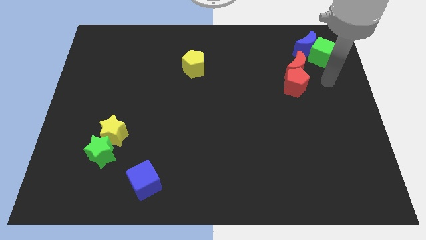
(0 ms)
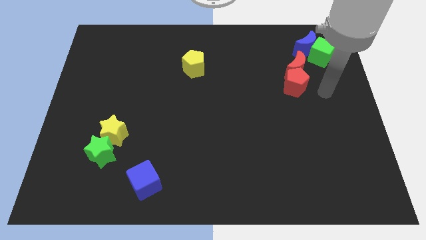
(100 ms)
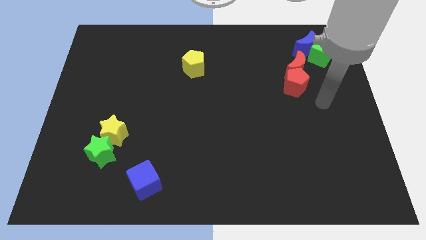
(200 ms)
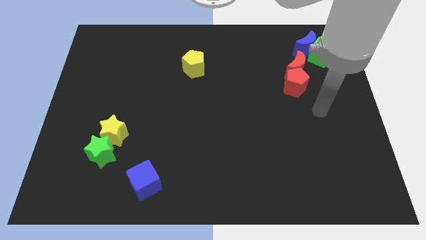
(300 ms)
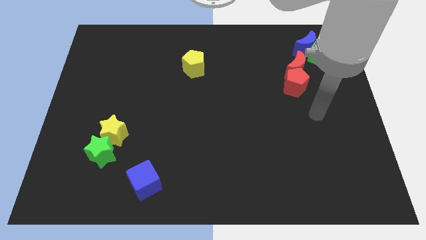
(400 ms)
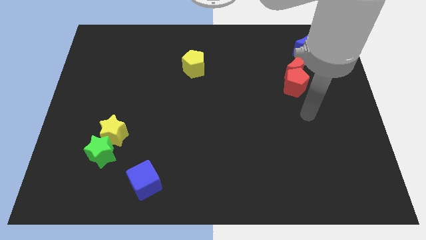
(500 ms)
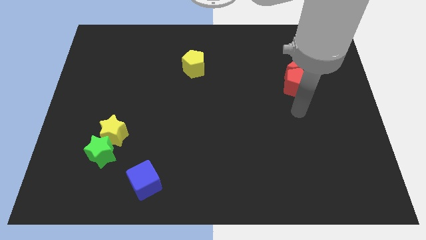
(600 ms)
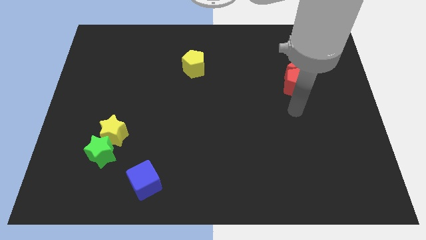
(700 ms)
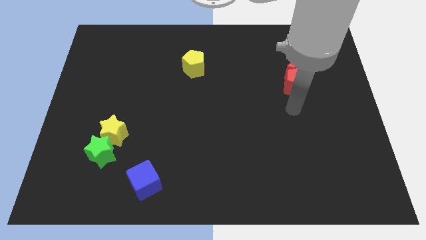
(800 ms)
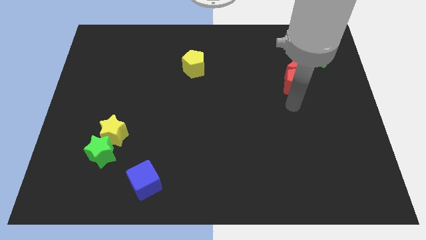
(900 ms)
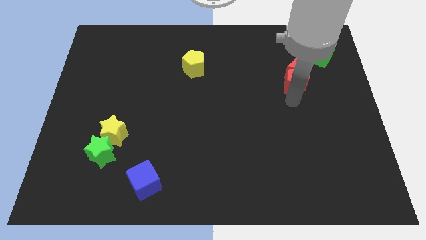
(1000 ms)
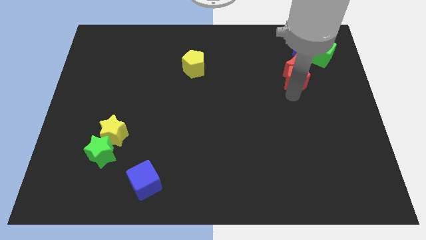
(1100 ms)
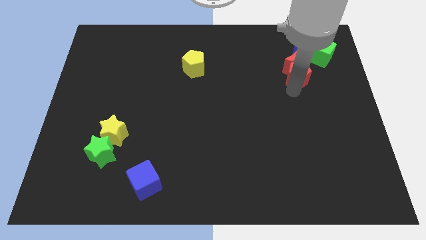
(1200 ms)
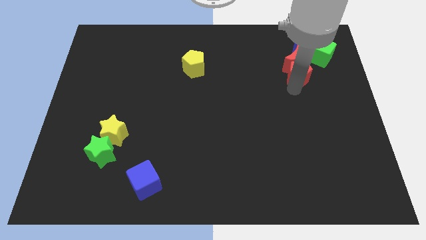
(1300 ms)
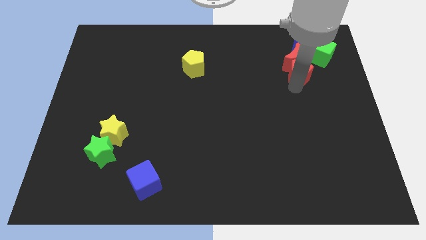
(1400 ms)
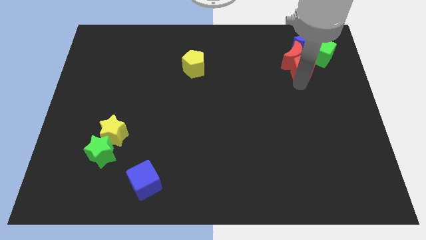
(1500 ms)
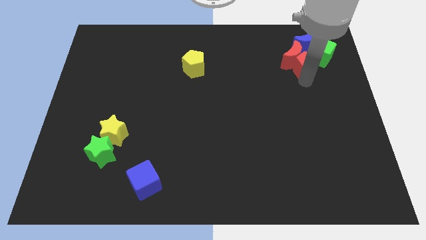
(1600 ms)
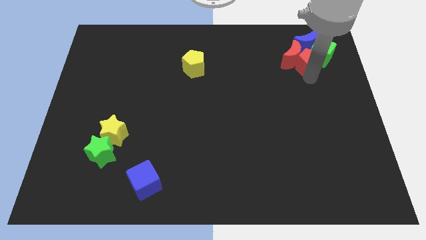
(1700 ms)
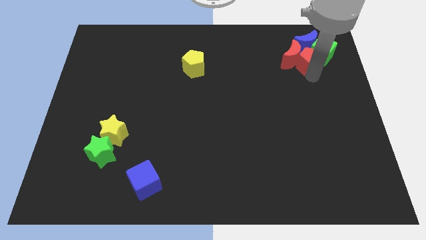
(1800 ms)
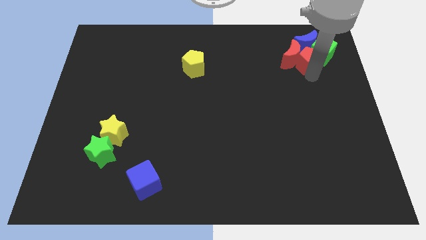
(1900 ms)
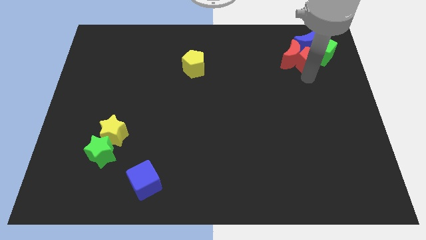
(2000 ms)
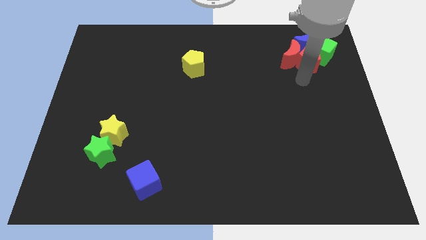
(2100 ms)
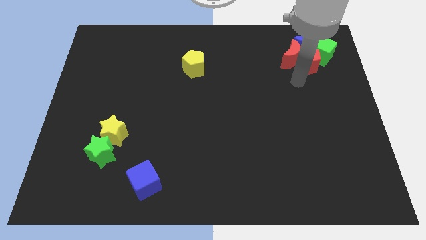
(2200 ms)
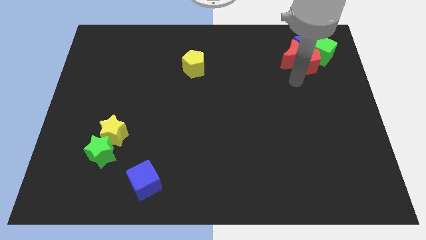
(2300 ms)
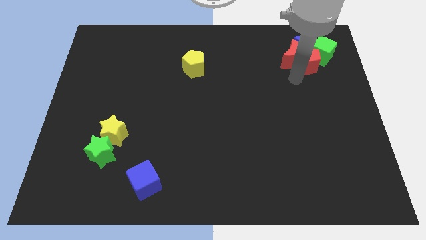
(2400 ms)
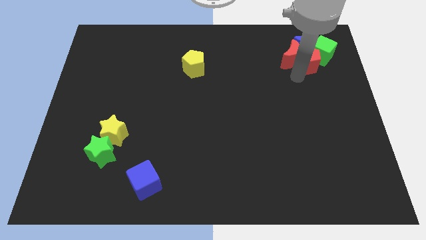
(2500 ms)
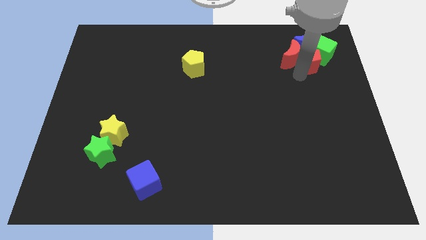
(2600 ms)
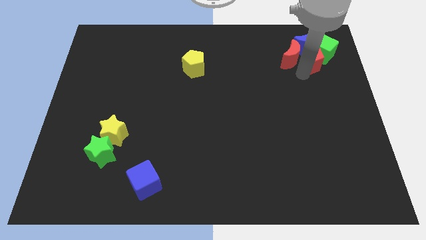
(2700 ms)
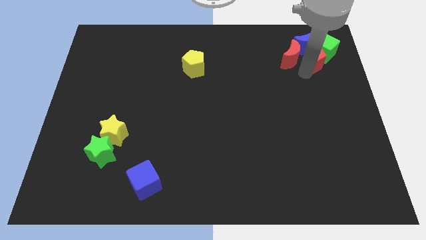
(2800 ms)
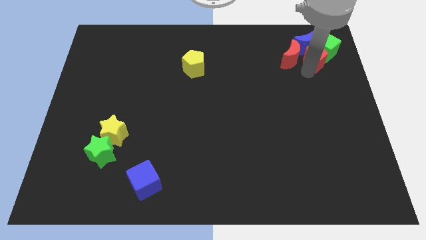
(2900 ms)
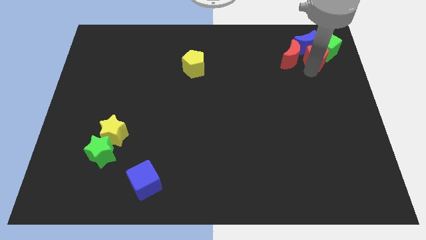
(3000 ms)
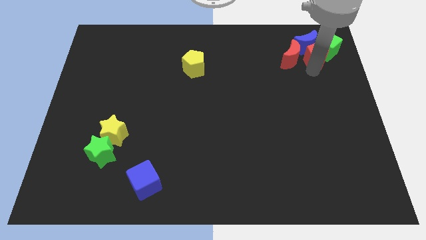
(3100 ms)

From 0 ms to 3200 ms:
slide the red pentagon into the green cube

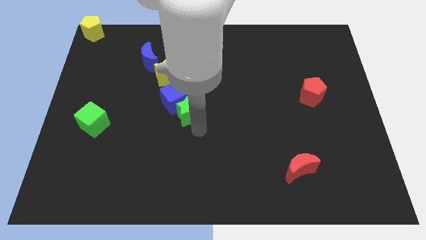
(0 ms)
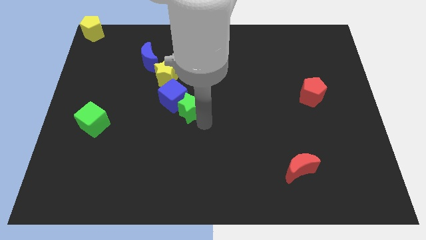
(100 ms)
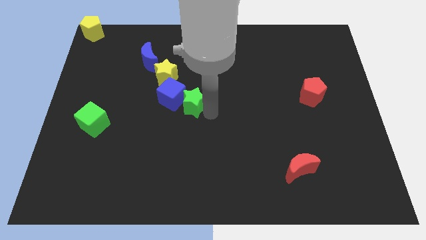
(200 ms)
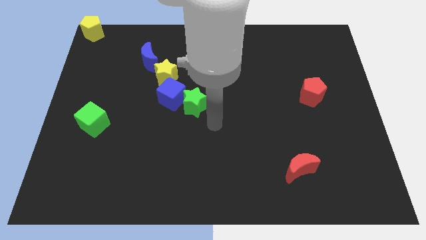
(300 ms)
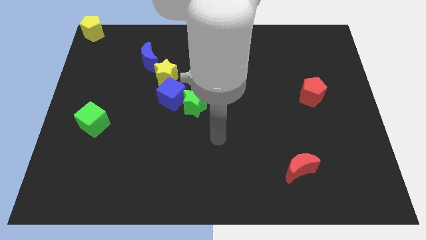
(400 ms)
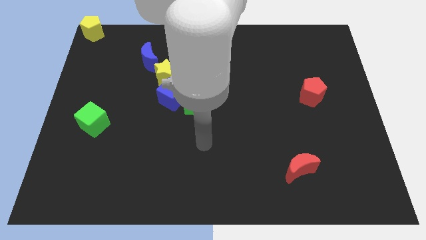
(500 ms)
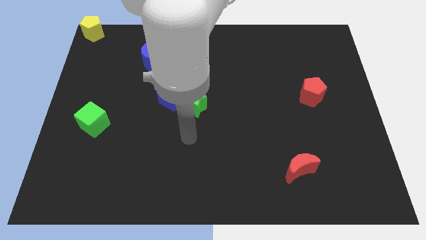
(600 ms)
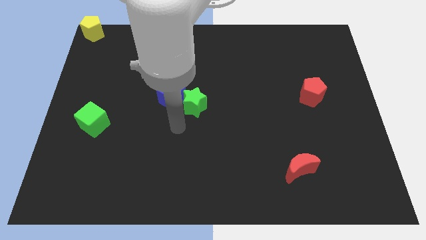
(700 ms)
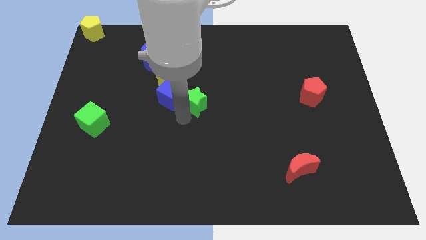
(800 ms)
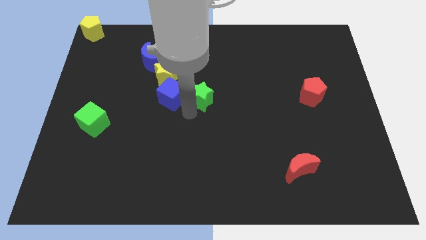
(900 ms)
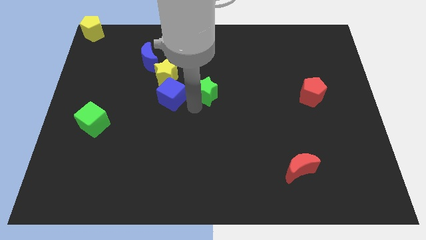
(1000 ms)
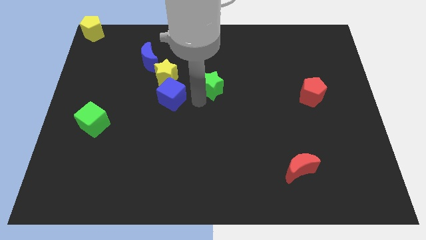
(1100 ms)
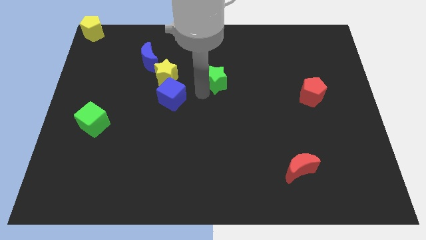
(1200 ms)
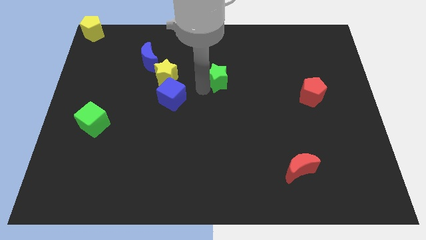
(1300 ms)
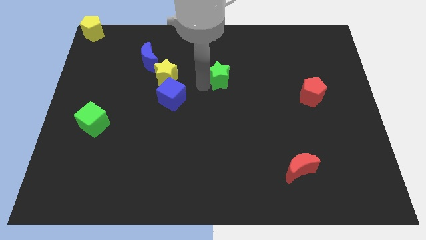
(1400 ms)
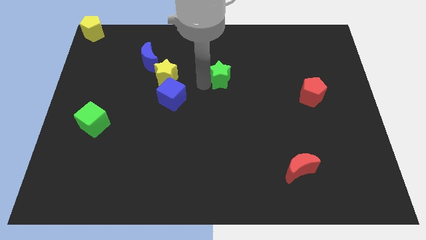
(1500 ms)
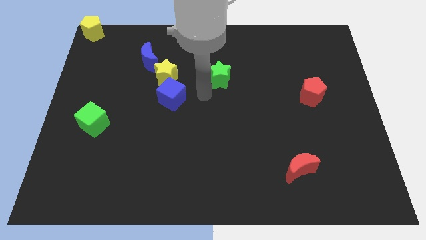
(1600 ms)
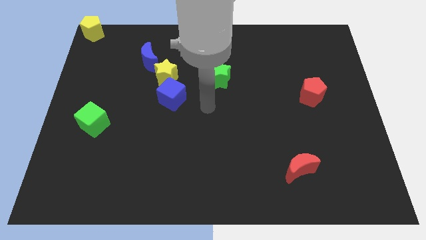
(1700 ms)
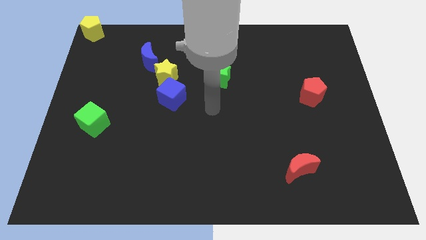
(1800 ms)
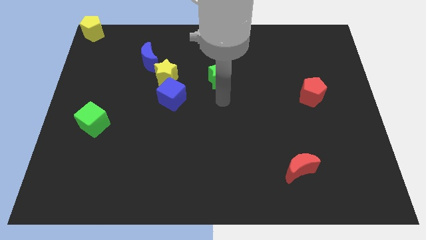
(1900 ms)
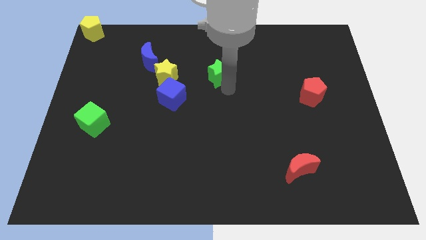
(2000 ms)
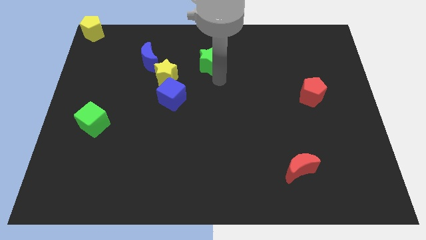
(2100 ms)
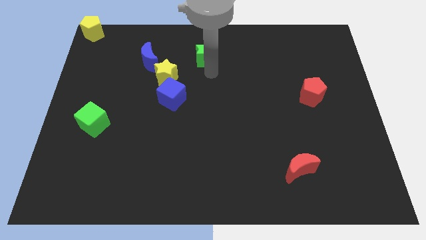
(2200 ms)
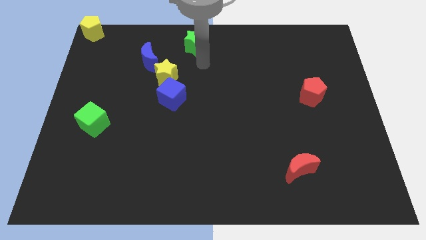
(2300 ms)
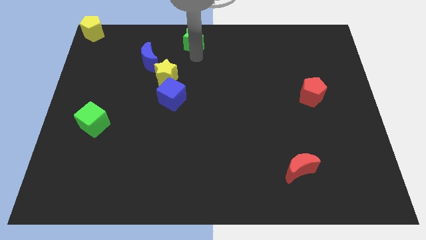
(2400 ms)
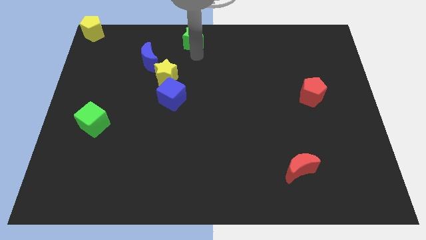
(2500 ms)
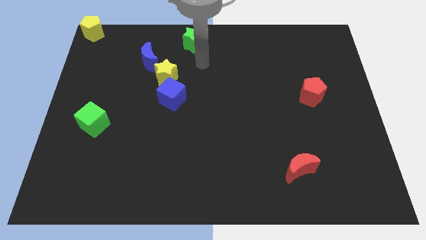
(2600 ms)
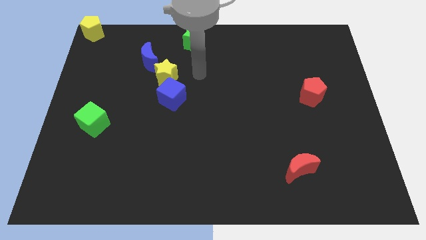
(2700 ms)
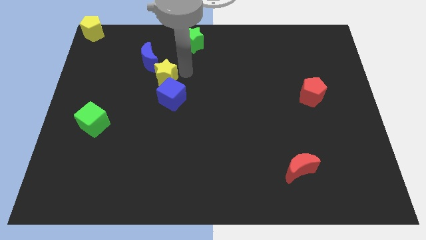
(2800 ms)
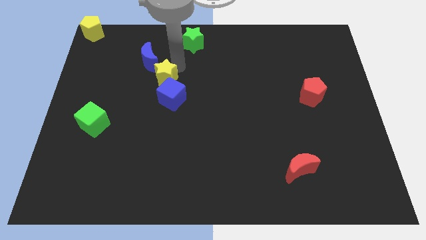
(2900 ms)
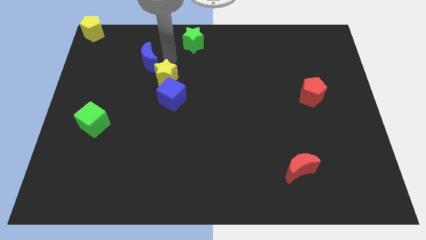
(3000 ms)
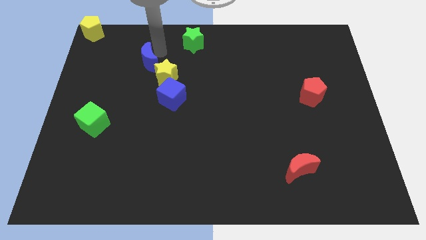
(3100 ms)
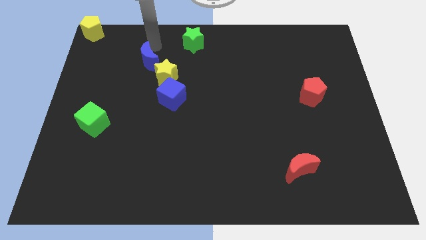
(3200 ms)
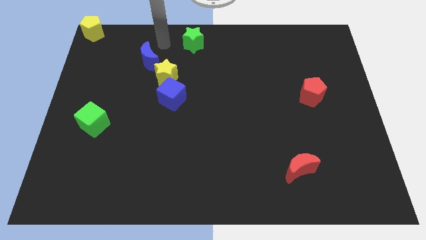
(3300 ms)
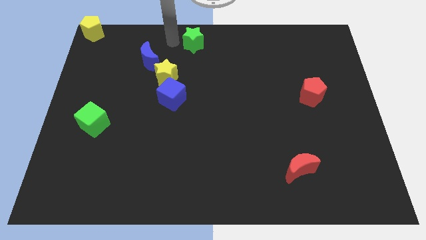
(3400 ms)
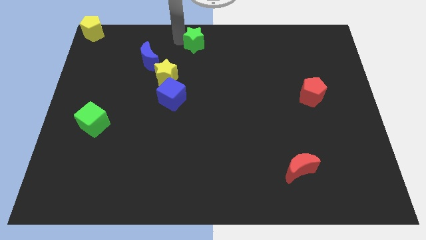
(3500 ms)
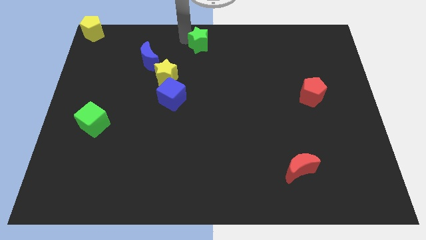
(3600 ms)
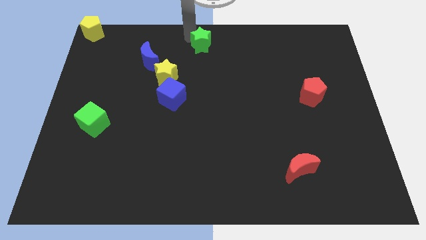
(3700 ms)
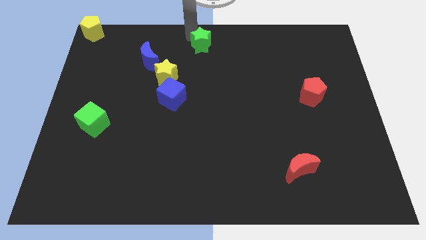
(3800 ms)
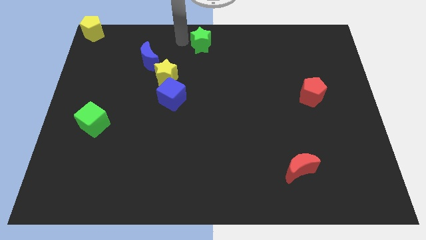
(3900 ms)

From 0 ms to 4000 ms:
push the green star to the top right of the blue crescent

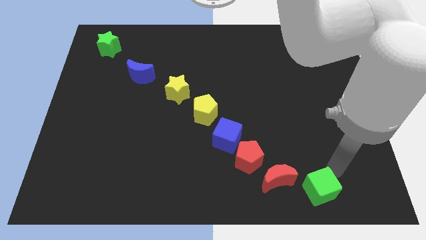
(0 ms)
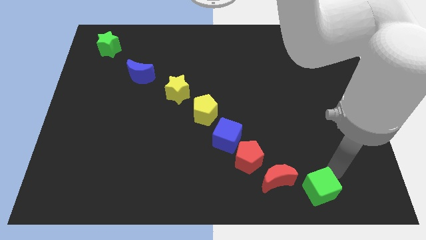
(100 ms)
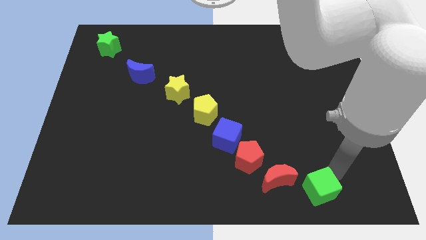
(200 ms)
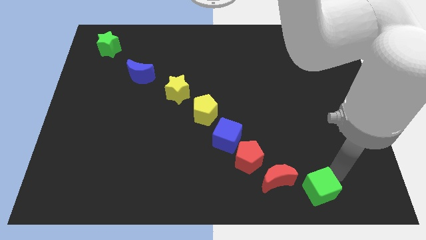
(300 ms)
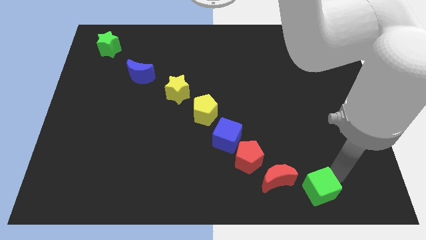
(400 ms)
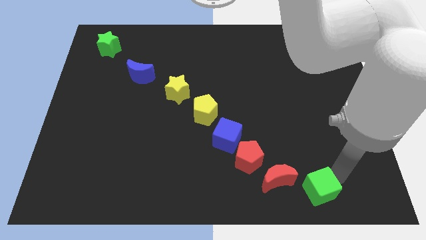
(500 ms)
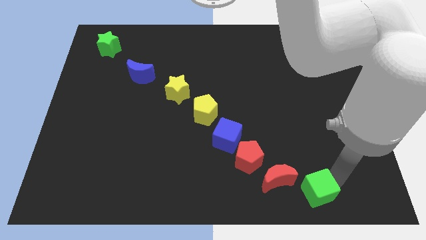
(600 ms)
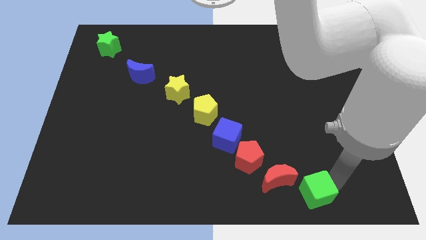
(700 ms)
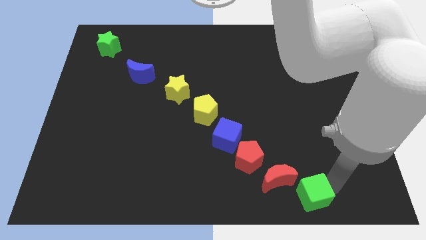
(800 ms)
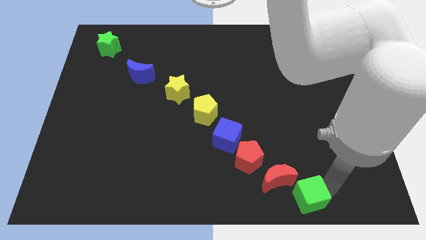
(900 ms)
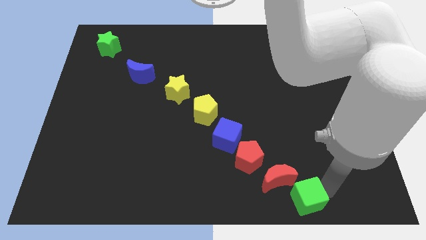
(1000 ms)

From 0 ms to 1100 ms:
push green cube to right bottom

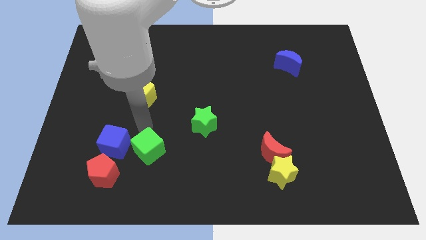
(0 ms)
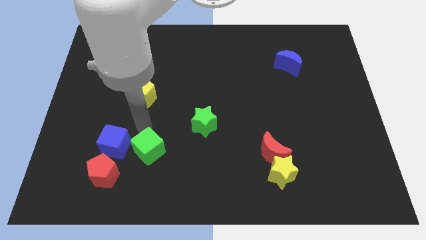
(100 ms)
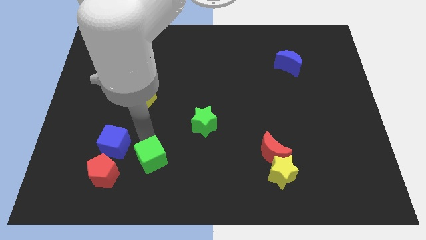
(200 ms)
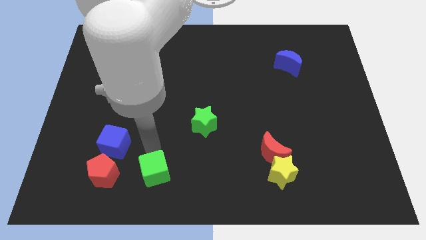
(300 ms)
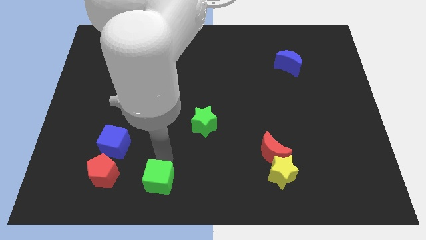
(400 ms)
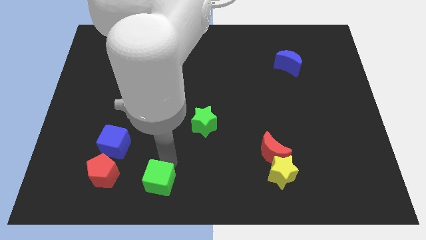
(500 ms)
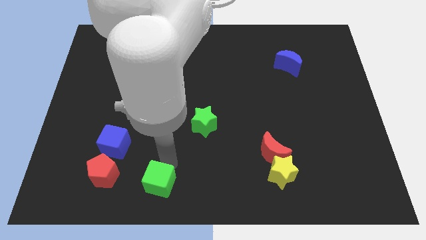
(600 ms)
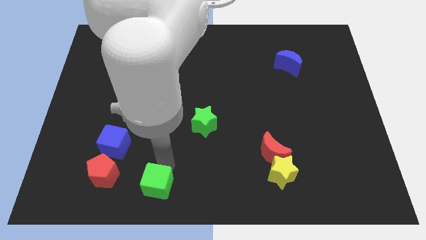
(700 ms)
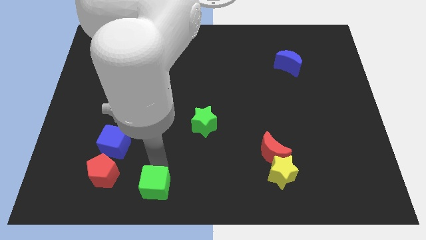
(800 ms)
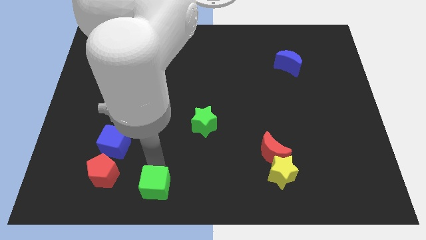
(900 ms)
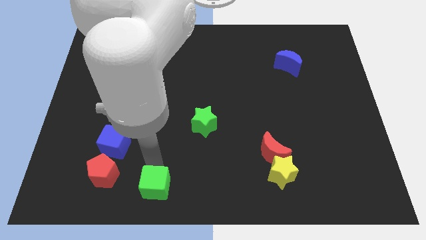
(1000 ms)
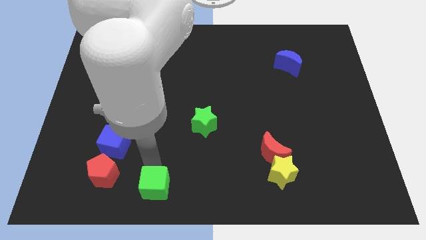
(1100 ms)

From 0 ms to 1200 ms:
move the green cube to the bottom right side of the red pentagon
